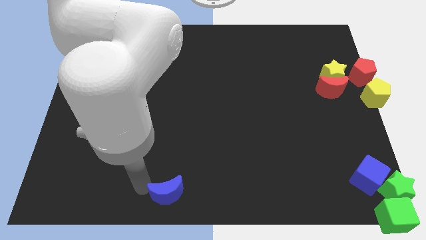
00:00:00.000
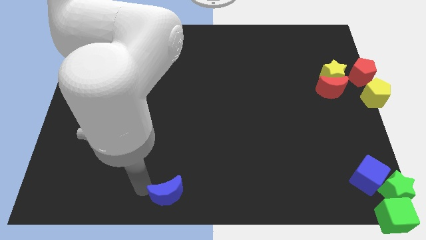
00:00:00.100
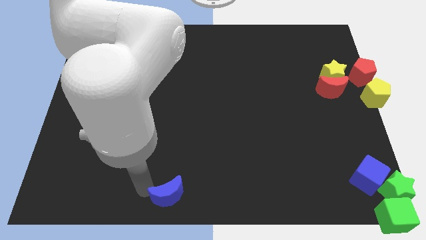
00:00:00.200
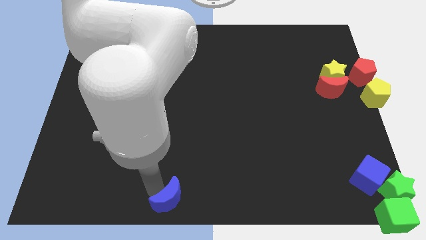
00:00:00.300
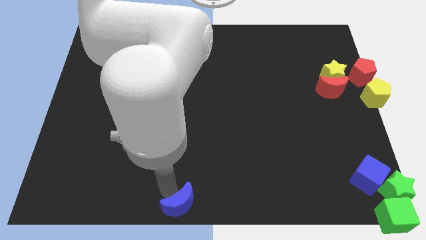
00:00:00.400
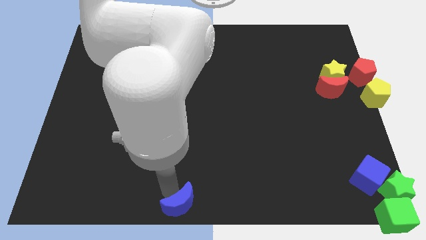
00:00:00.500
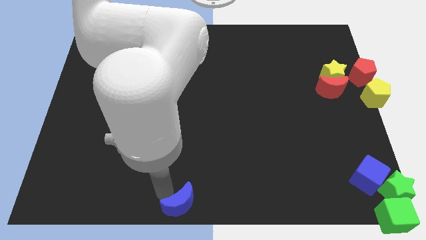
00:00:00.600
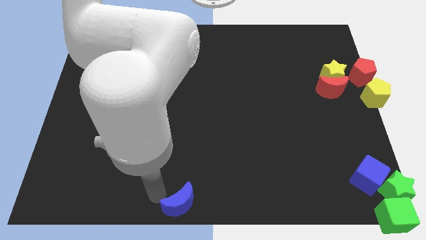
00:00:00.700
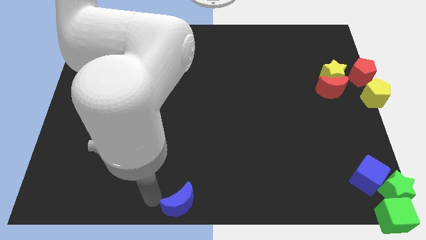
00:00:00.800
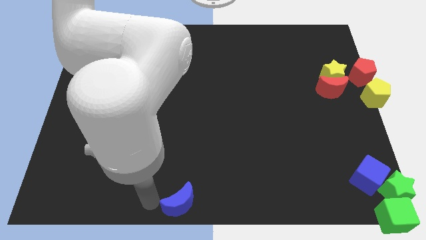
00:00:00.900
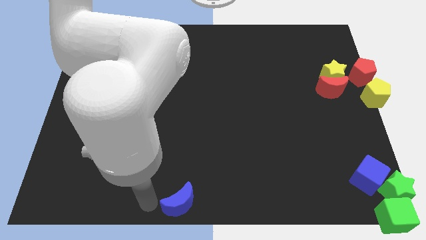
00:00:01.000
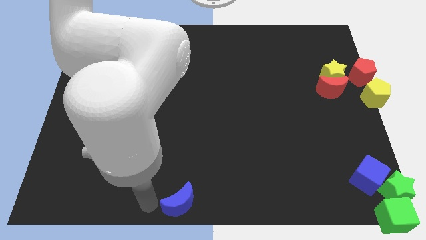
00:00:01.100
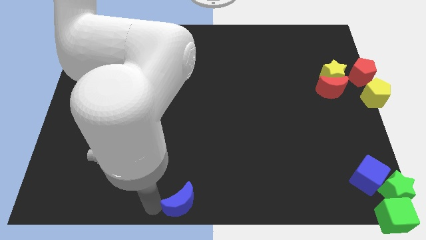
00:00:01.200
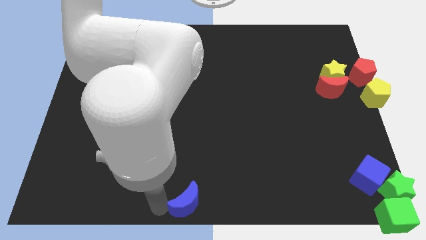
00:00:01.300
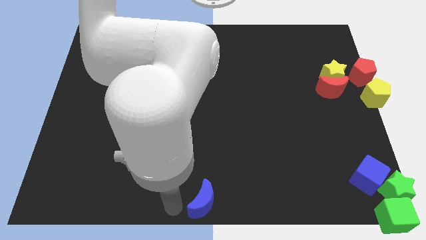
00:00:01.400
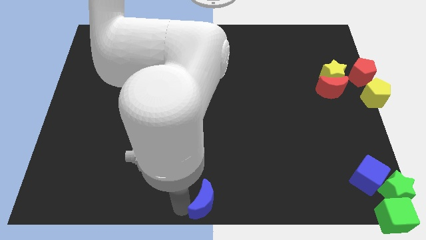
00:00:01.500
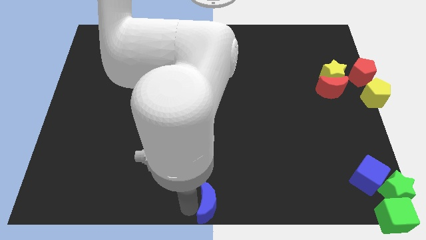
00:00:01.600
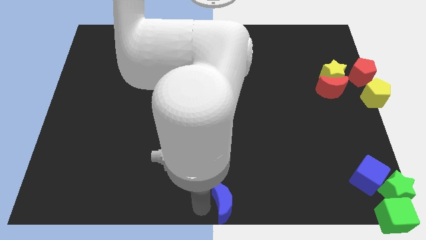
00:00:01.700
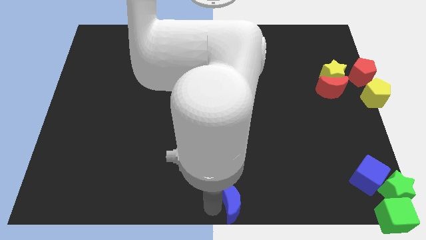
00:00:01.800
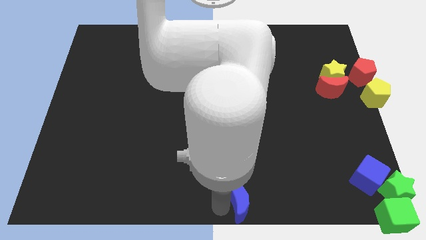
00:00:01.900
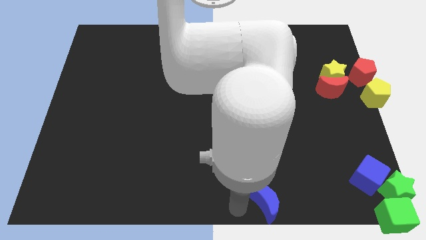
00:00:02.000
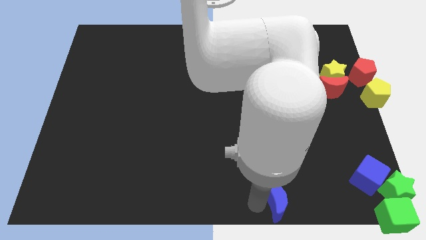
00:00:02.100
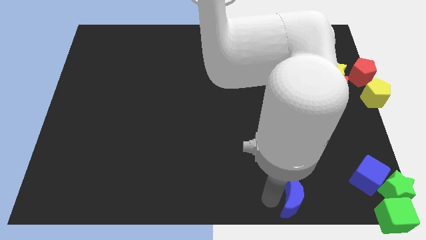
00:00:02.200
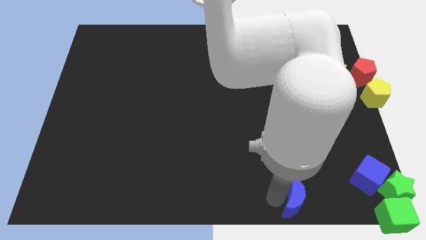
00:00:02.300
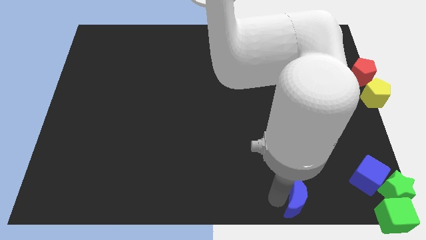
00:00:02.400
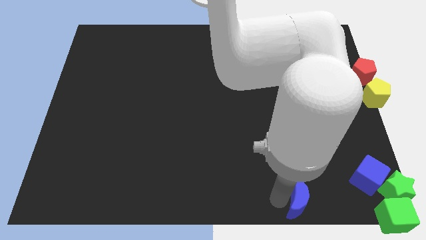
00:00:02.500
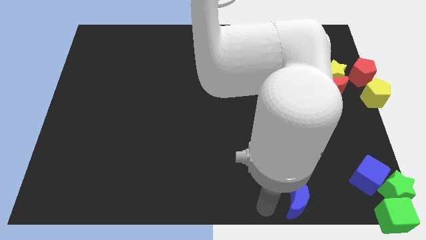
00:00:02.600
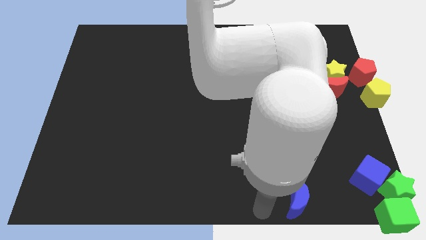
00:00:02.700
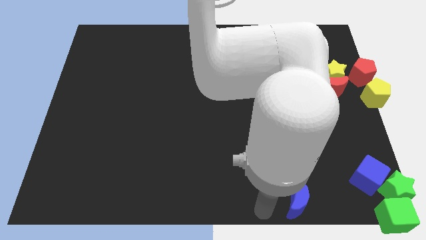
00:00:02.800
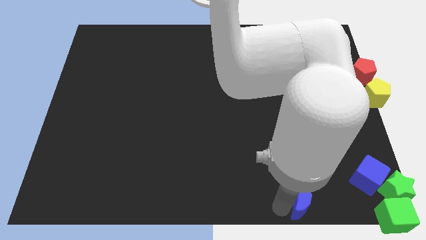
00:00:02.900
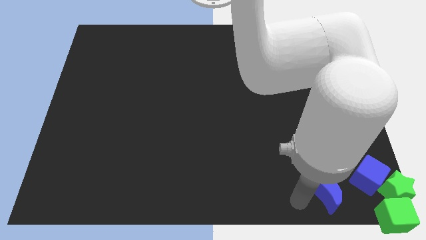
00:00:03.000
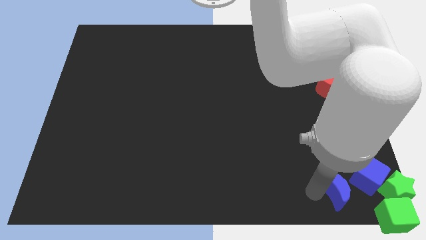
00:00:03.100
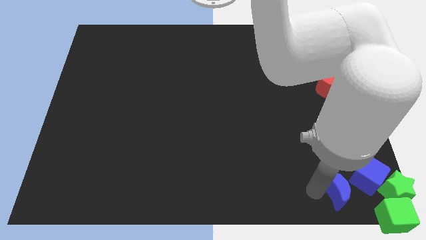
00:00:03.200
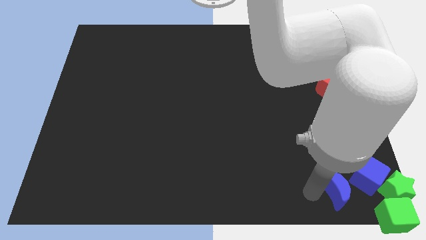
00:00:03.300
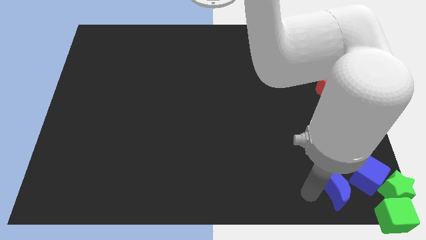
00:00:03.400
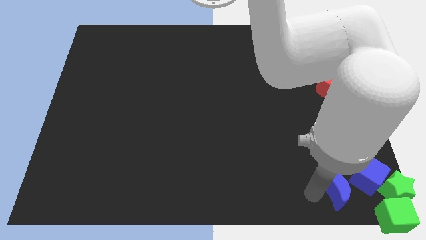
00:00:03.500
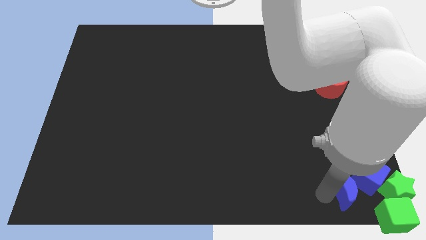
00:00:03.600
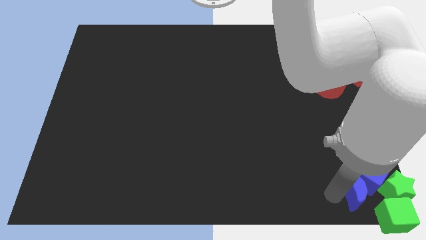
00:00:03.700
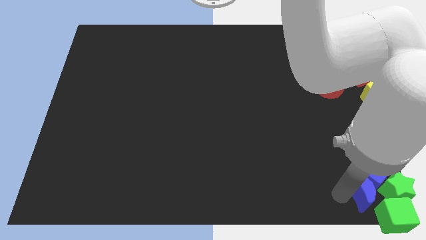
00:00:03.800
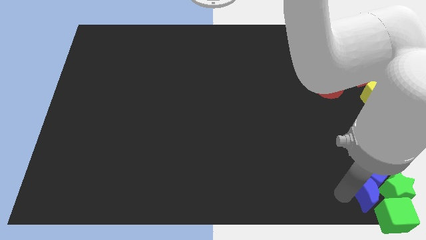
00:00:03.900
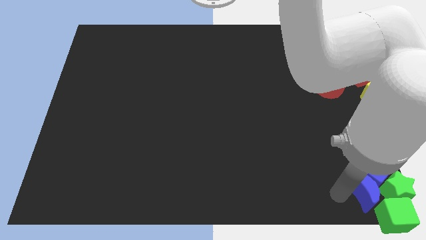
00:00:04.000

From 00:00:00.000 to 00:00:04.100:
push blue crescent into the blue cube

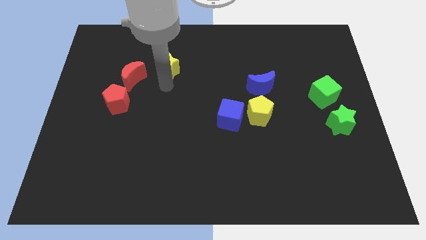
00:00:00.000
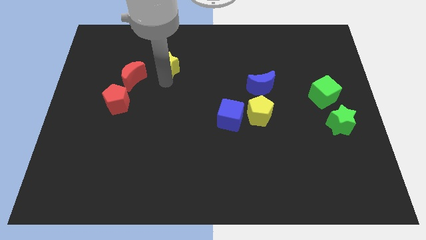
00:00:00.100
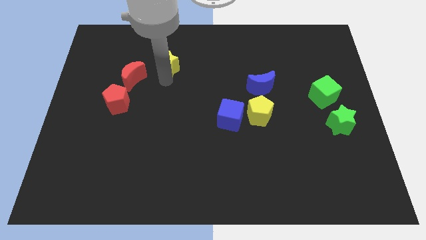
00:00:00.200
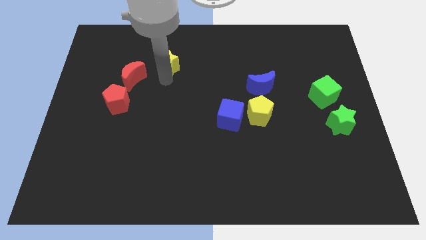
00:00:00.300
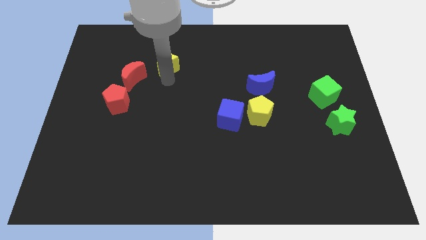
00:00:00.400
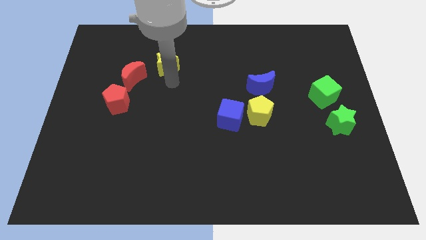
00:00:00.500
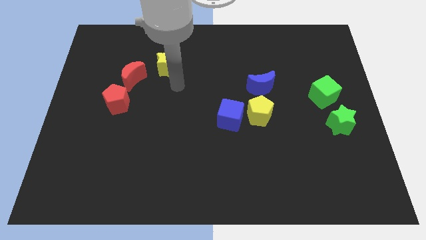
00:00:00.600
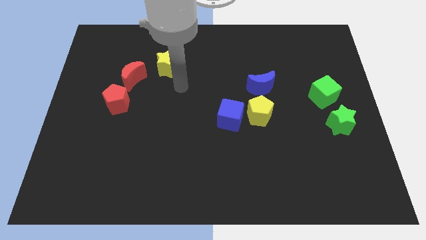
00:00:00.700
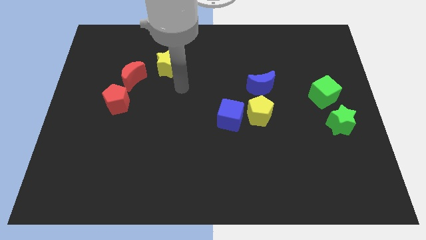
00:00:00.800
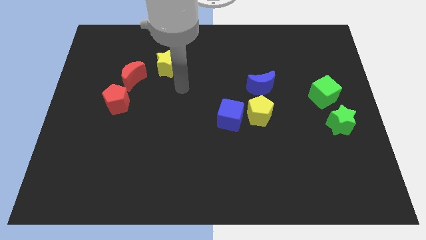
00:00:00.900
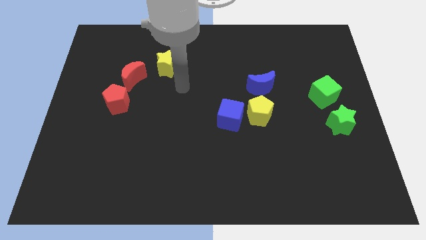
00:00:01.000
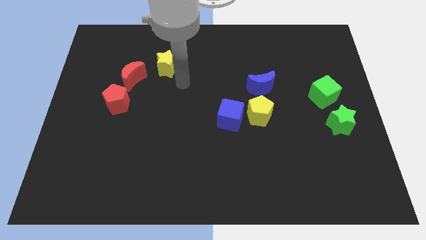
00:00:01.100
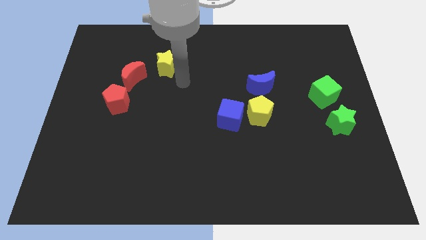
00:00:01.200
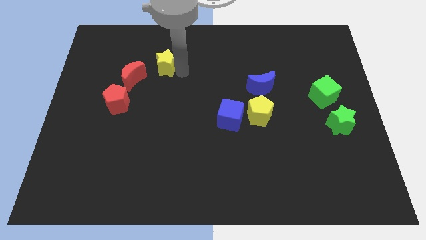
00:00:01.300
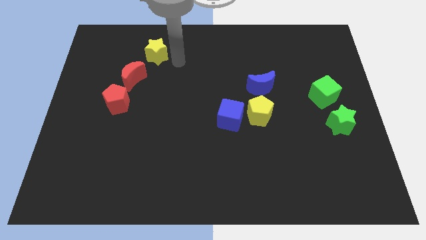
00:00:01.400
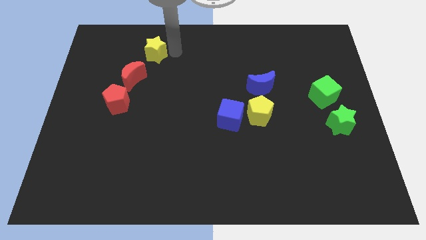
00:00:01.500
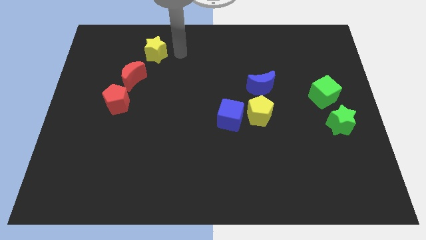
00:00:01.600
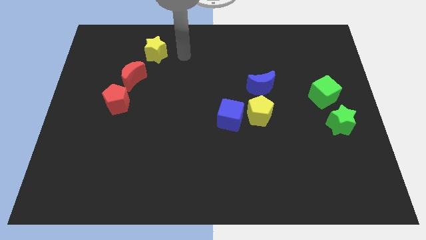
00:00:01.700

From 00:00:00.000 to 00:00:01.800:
move the yellow star up slightly

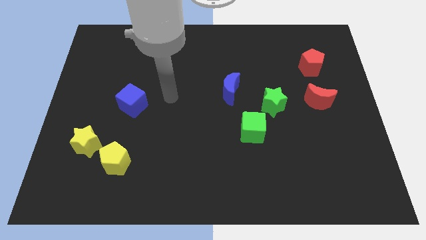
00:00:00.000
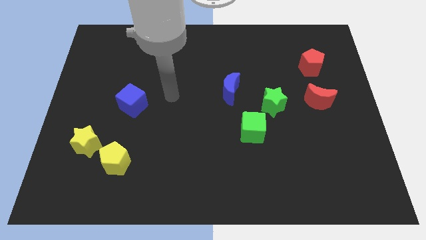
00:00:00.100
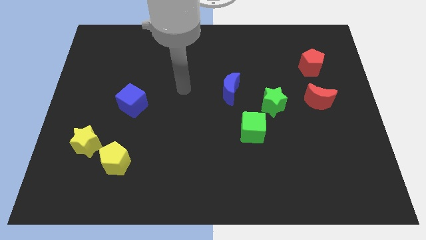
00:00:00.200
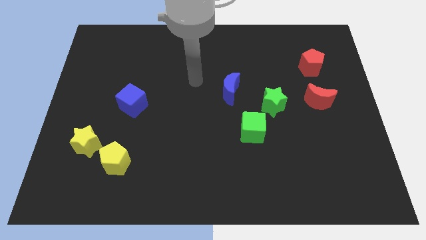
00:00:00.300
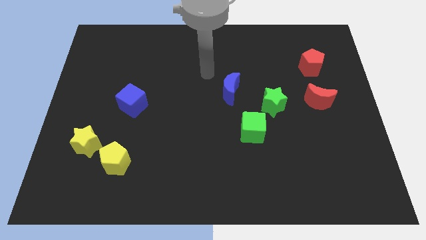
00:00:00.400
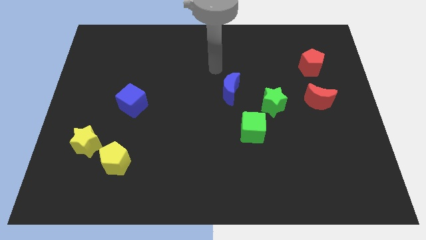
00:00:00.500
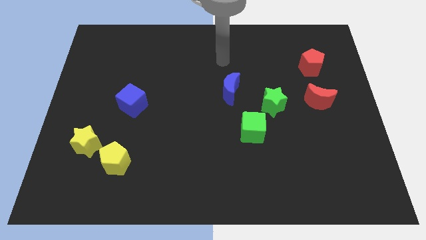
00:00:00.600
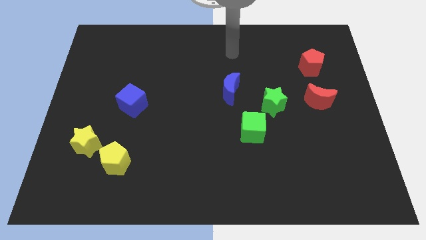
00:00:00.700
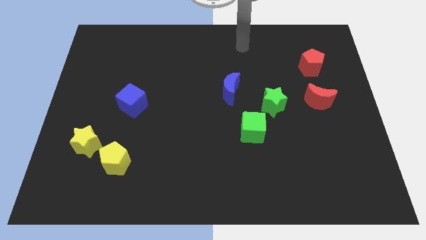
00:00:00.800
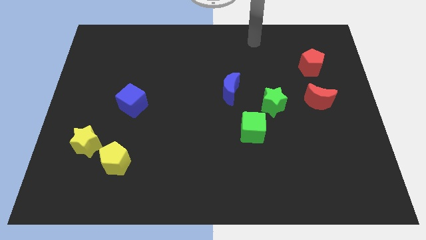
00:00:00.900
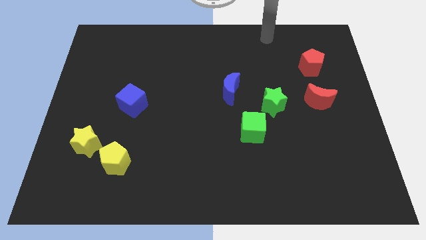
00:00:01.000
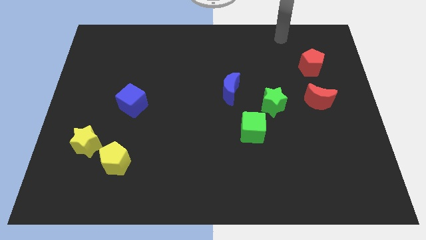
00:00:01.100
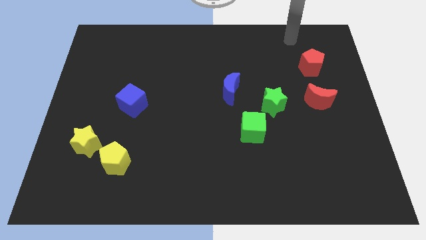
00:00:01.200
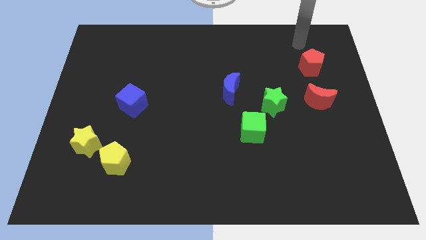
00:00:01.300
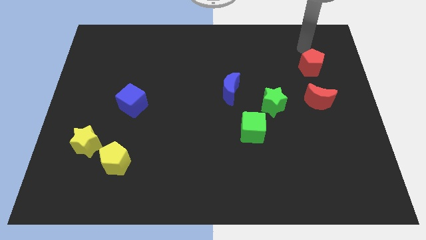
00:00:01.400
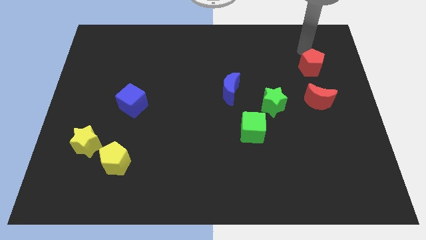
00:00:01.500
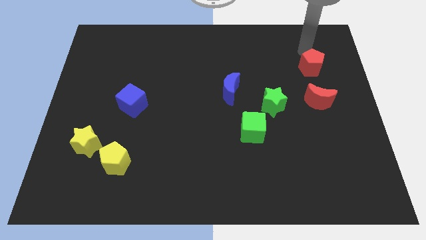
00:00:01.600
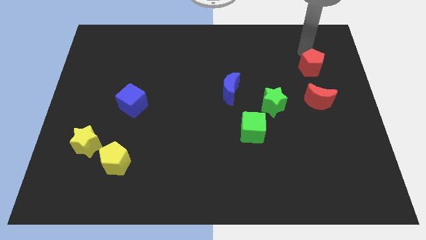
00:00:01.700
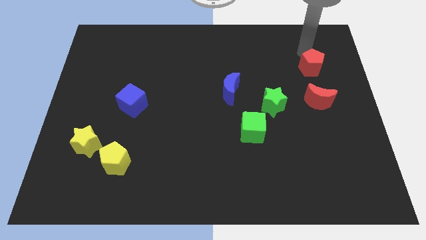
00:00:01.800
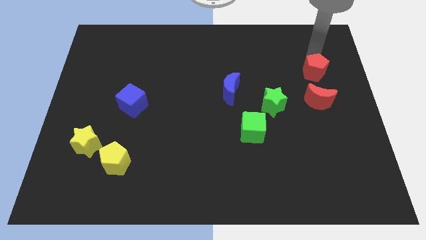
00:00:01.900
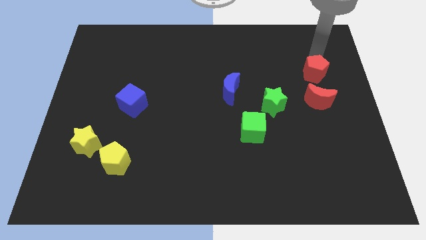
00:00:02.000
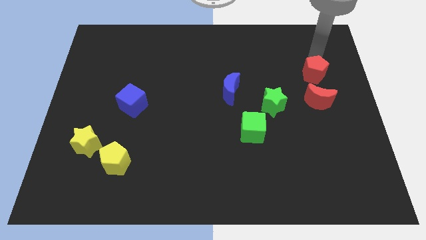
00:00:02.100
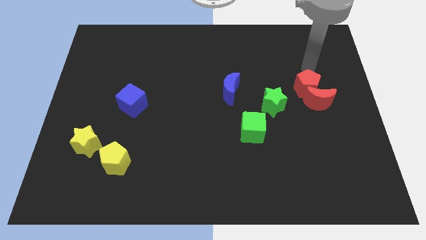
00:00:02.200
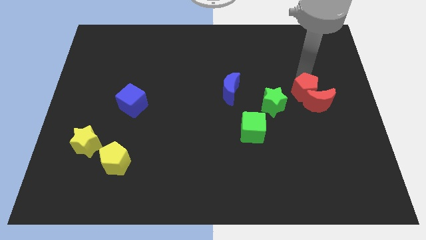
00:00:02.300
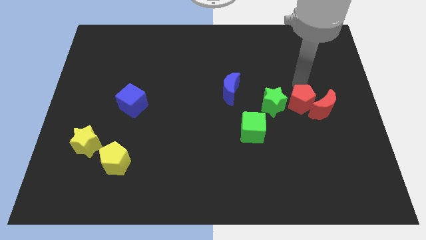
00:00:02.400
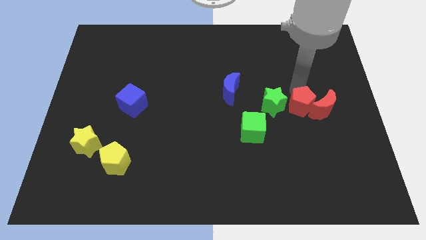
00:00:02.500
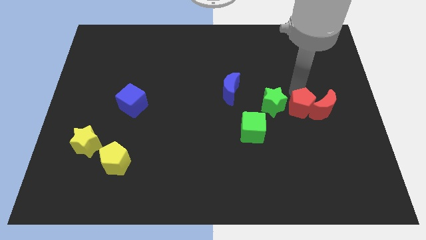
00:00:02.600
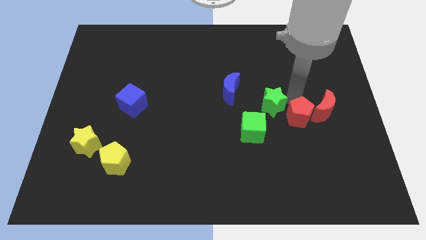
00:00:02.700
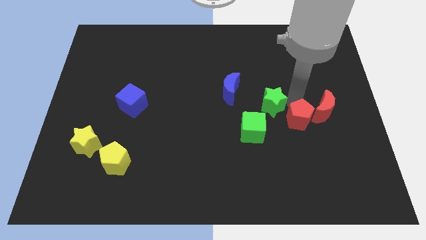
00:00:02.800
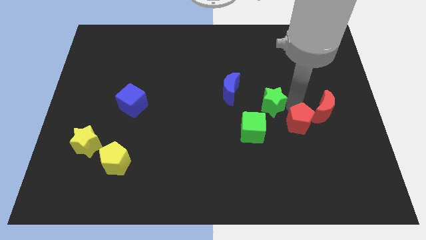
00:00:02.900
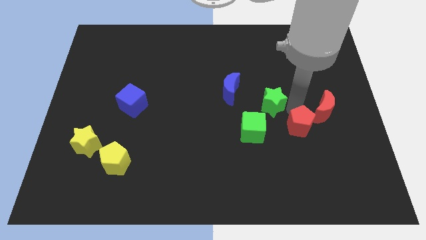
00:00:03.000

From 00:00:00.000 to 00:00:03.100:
push the red pentagon to the bottom right of the green star
